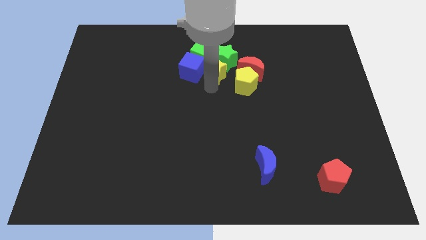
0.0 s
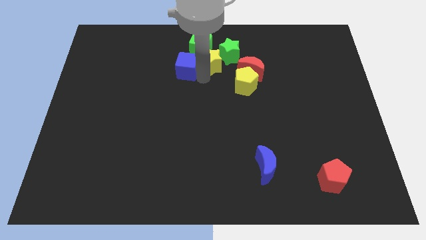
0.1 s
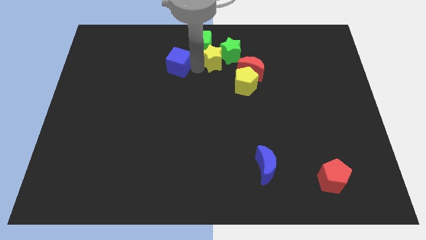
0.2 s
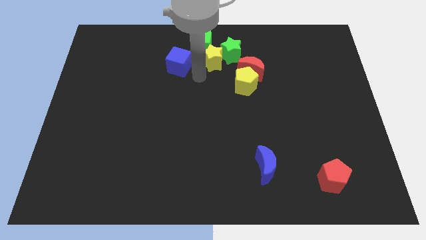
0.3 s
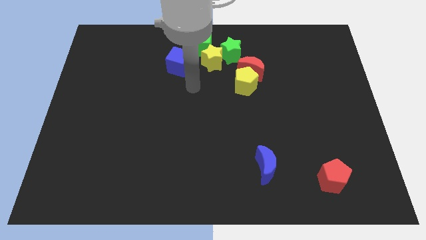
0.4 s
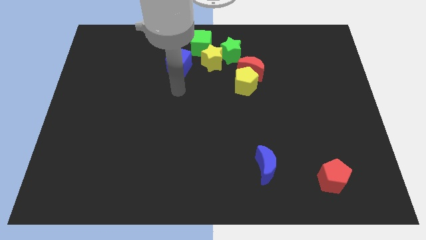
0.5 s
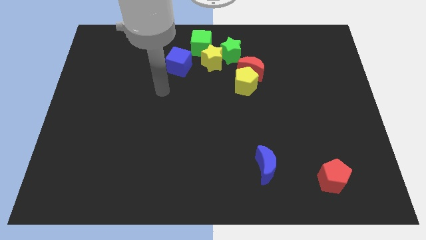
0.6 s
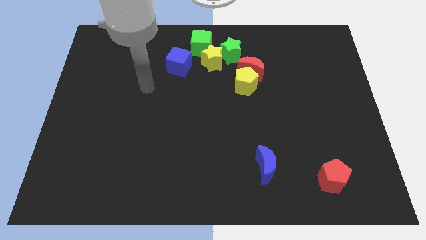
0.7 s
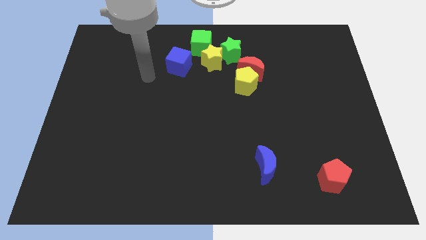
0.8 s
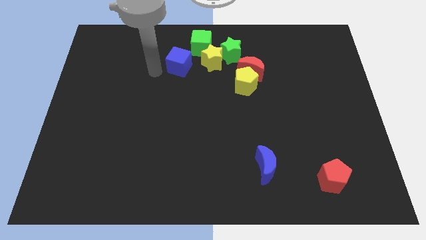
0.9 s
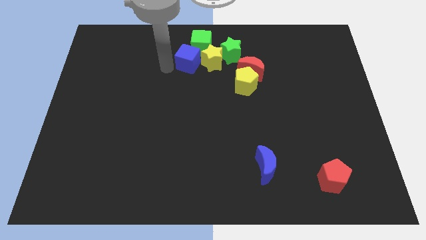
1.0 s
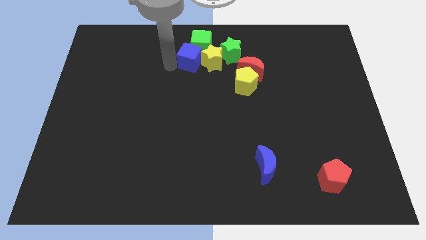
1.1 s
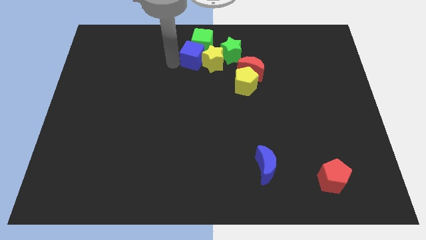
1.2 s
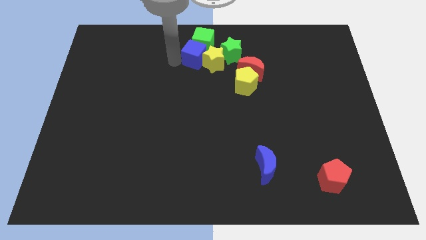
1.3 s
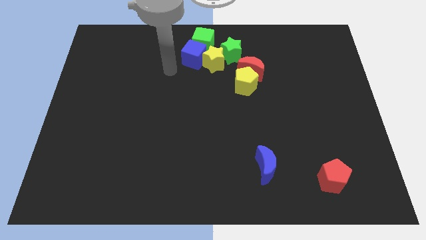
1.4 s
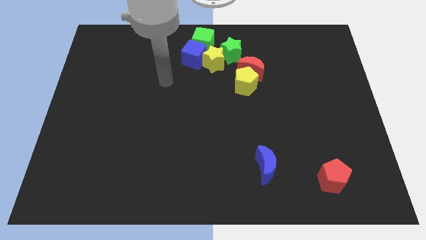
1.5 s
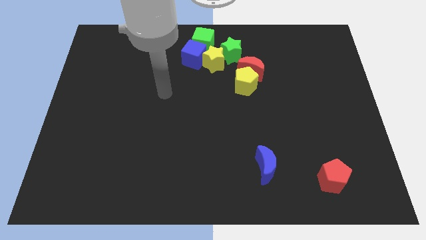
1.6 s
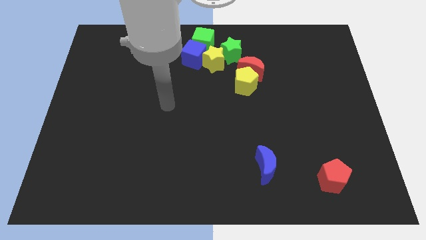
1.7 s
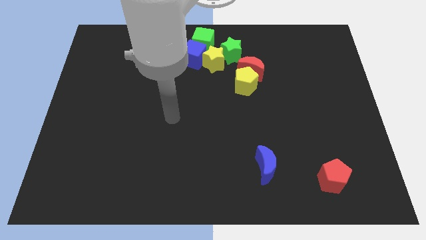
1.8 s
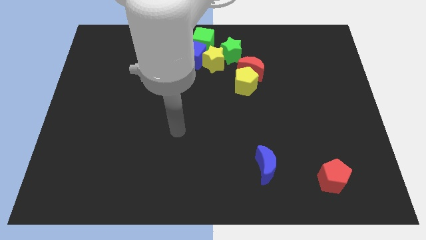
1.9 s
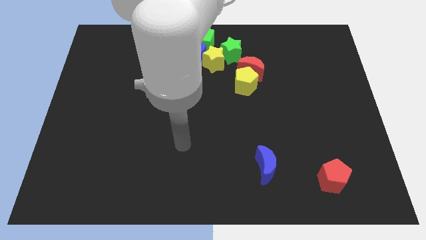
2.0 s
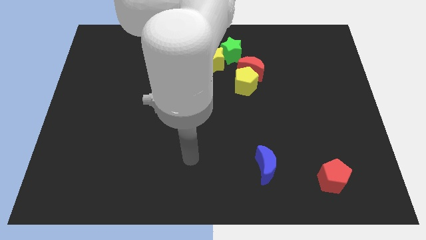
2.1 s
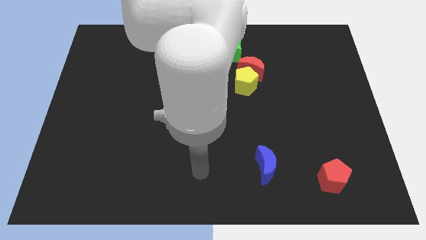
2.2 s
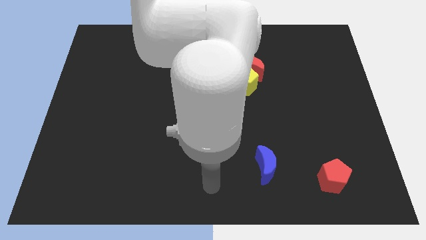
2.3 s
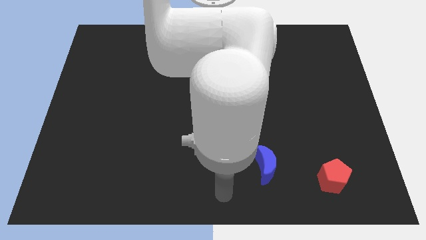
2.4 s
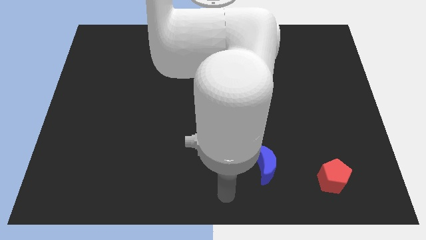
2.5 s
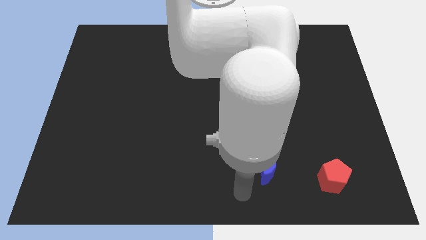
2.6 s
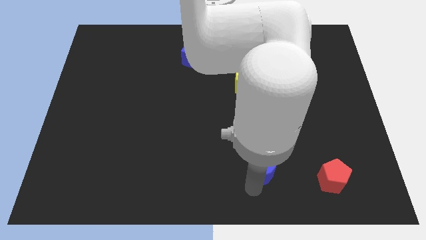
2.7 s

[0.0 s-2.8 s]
move your arm towards the blue moon

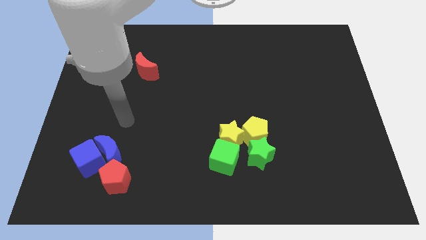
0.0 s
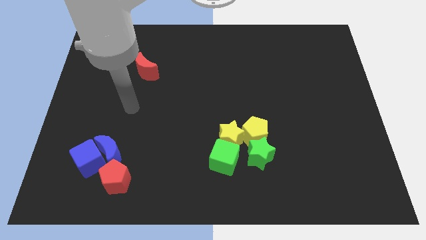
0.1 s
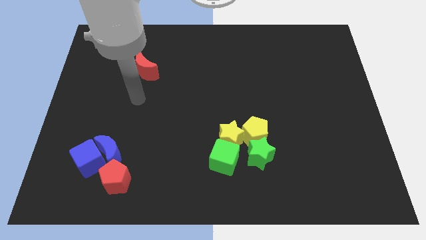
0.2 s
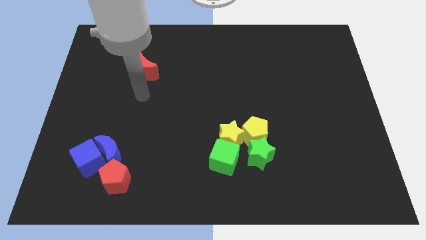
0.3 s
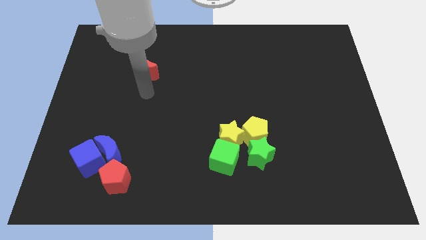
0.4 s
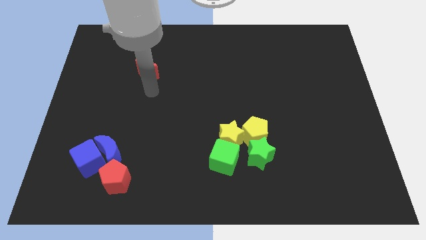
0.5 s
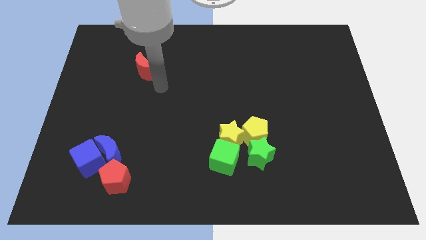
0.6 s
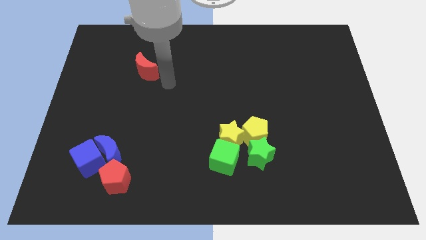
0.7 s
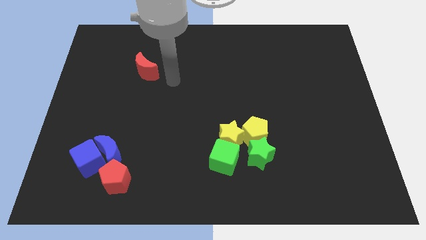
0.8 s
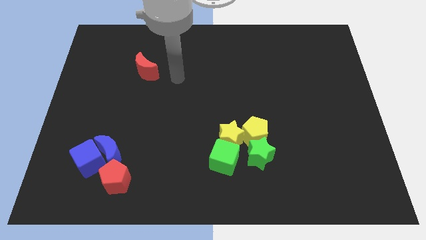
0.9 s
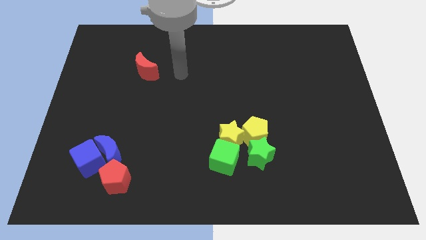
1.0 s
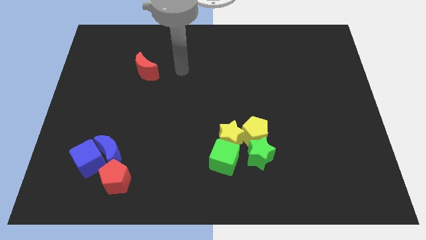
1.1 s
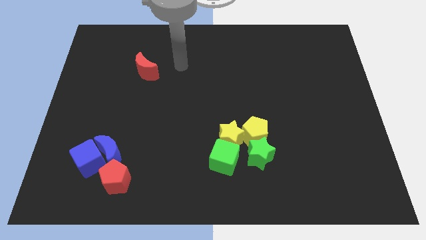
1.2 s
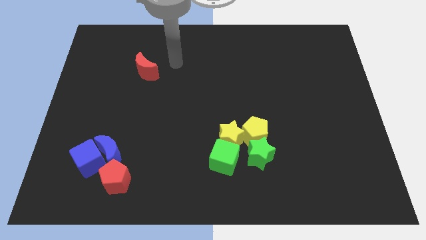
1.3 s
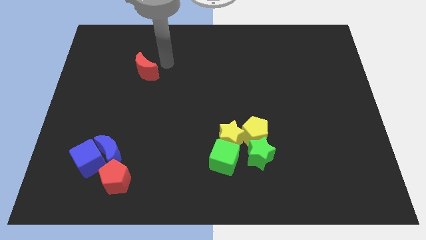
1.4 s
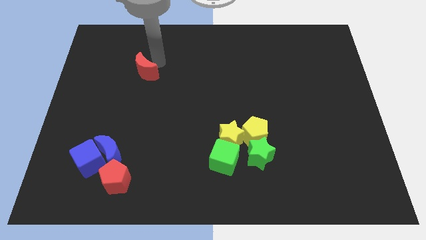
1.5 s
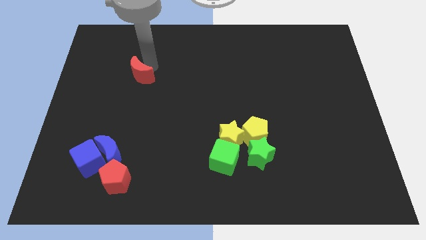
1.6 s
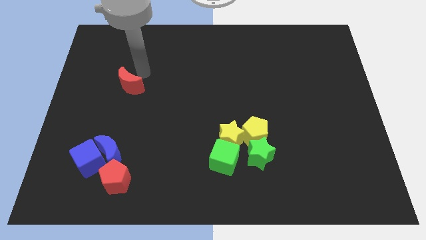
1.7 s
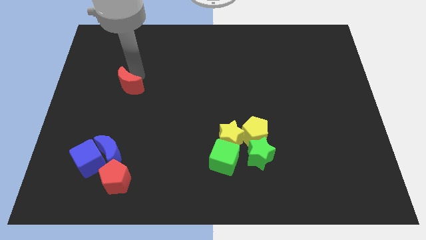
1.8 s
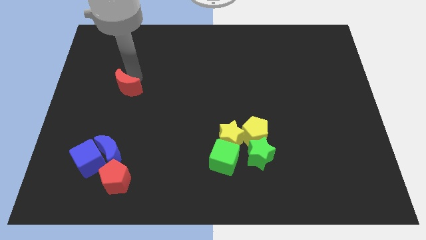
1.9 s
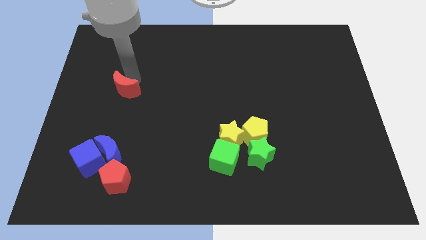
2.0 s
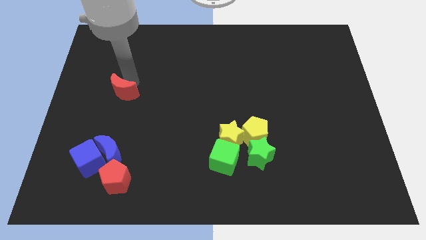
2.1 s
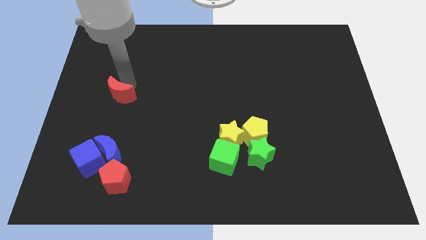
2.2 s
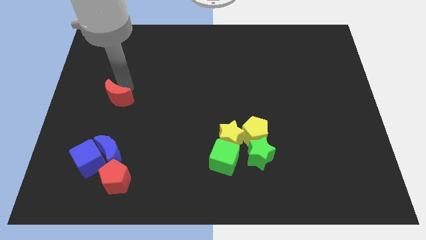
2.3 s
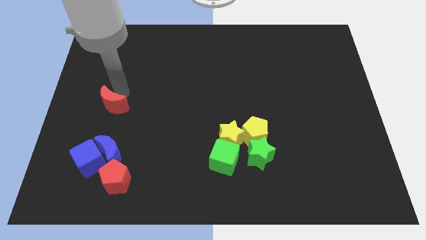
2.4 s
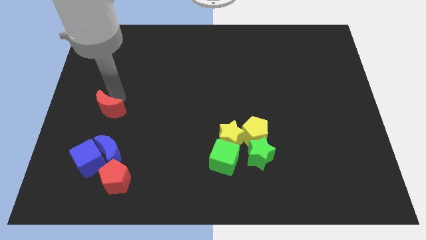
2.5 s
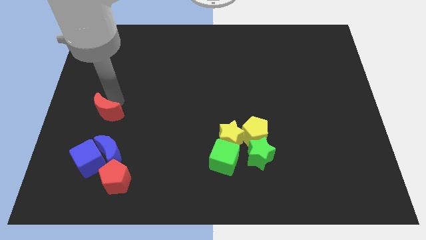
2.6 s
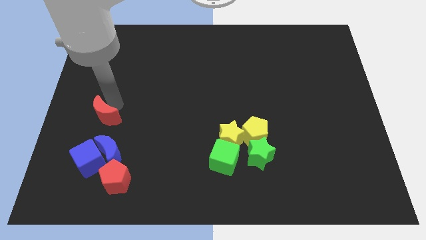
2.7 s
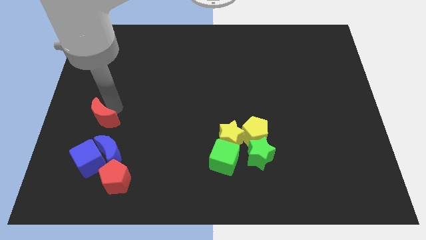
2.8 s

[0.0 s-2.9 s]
put the red crescent close to the group of blue blocks

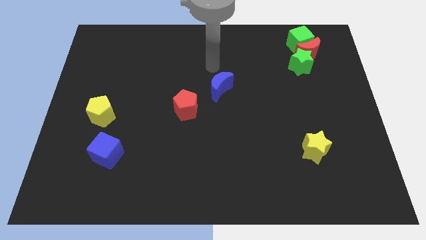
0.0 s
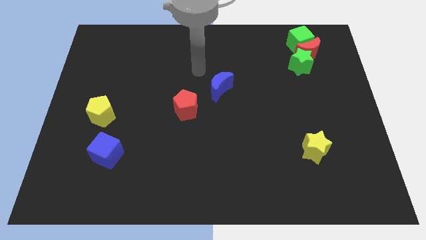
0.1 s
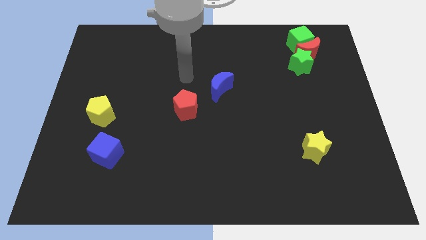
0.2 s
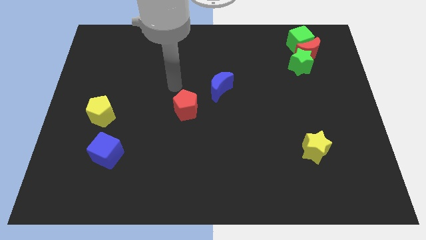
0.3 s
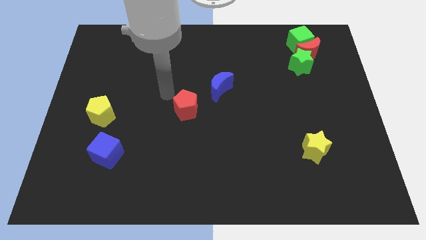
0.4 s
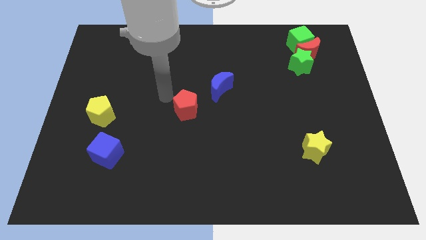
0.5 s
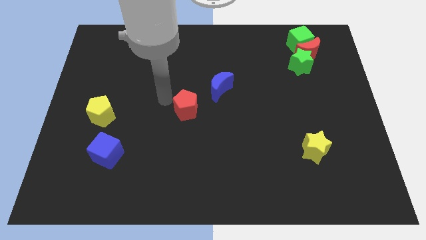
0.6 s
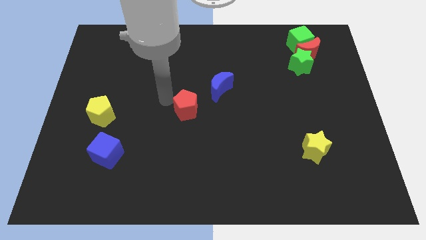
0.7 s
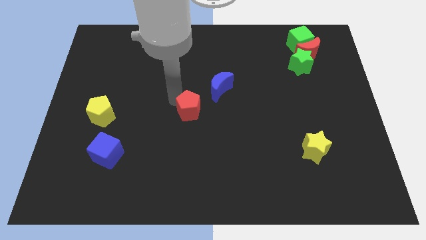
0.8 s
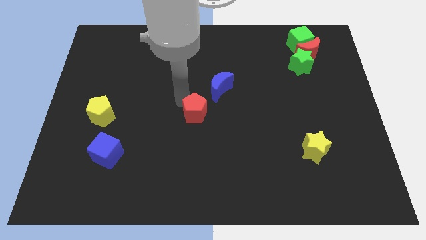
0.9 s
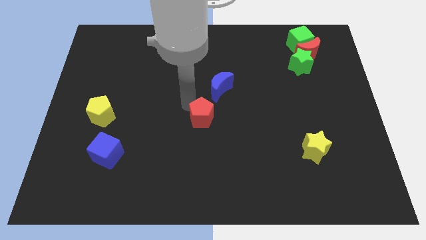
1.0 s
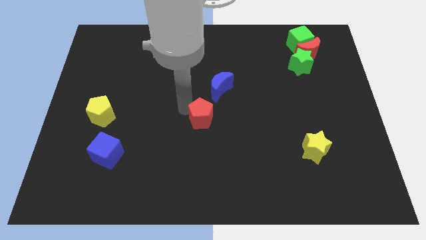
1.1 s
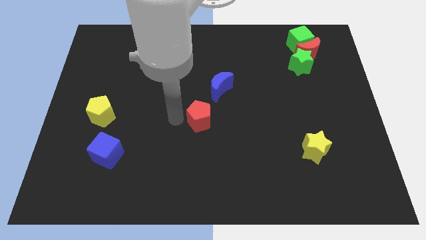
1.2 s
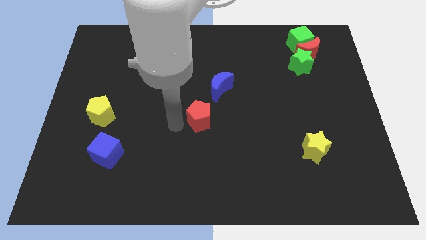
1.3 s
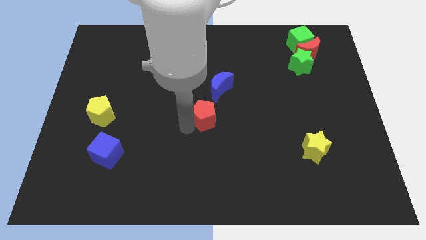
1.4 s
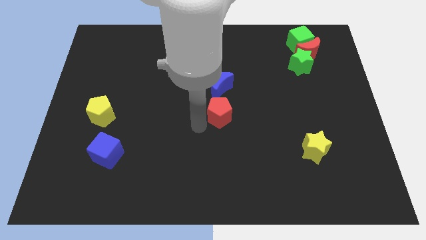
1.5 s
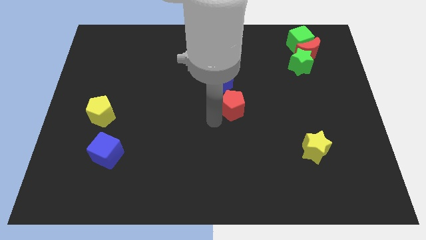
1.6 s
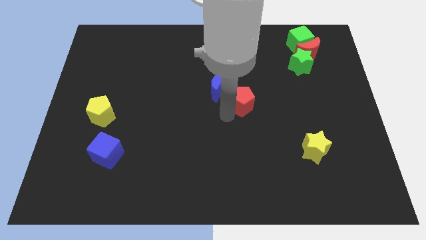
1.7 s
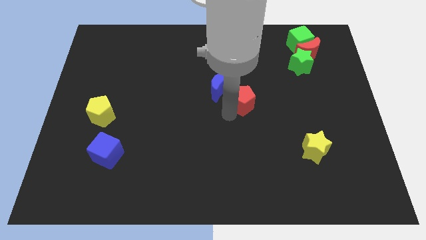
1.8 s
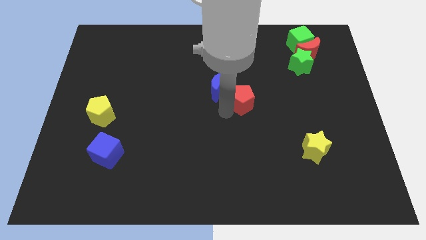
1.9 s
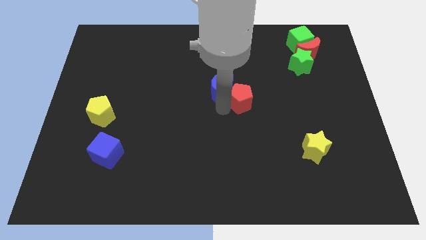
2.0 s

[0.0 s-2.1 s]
push the red pentagon to the right of the blue moon

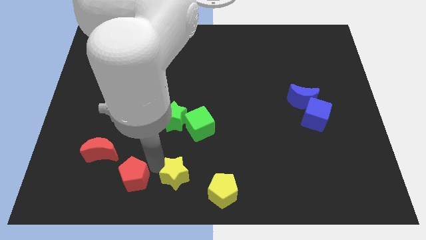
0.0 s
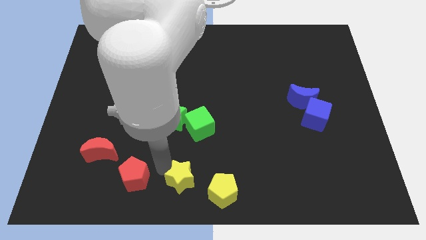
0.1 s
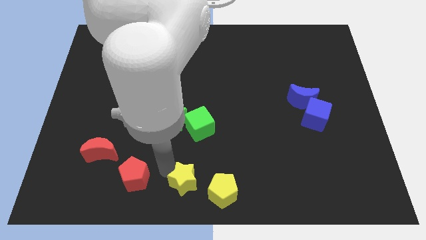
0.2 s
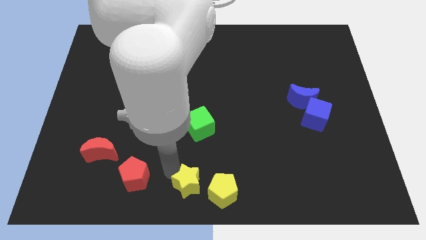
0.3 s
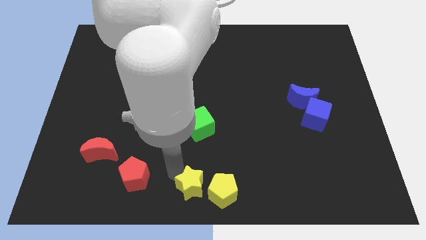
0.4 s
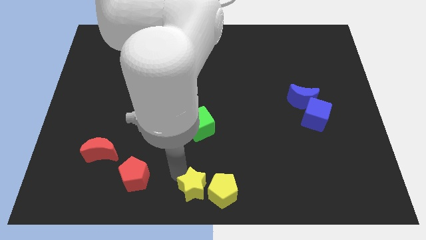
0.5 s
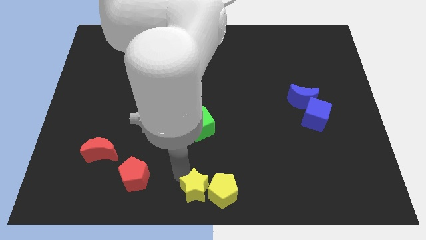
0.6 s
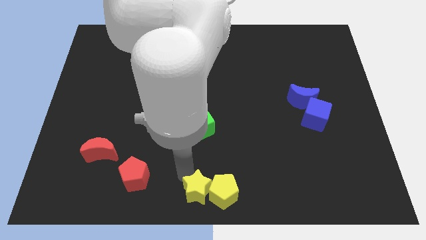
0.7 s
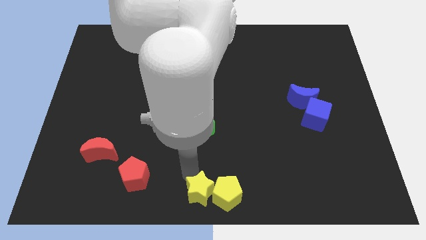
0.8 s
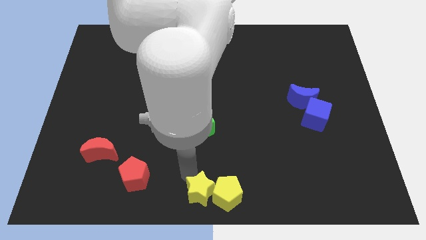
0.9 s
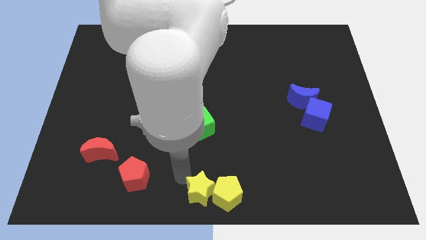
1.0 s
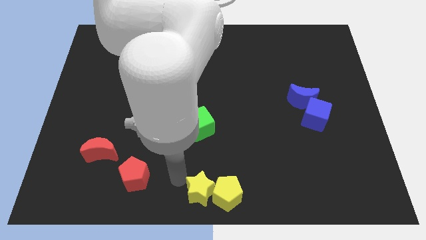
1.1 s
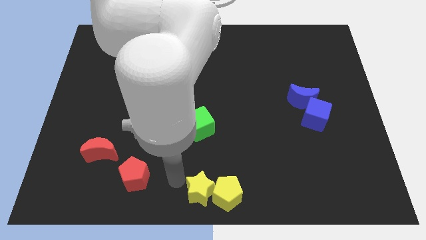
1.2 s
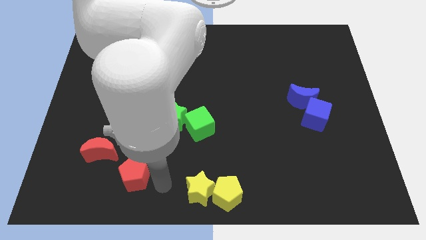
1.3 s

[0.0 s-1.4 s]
push the yellow star and pentagon to right
